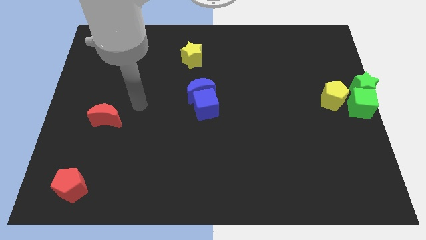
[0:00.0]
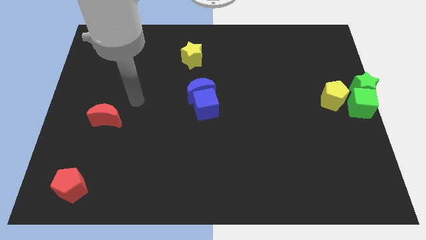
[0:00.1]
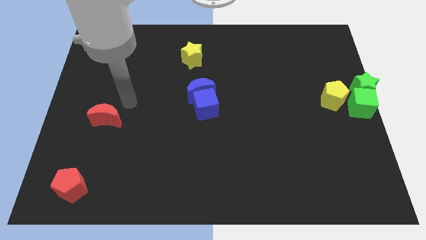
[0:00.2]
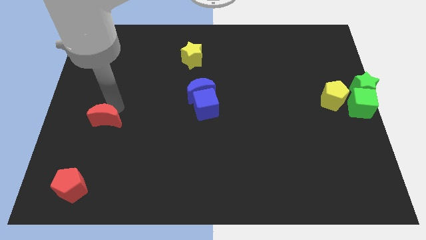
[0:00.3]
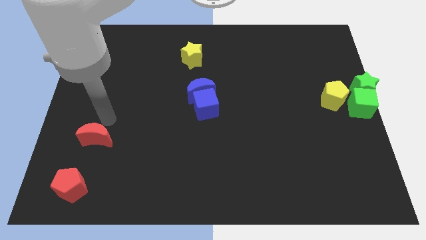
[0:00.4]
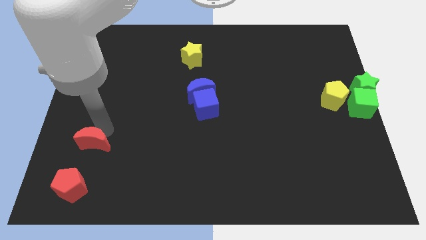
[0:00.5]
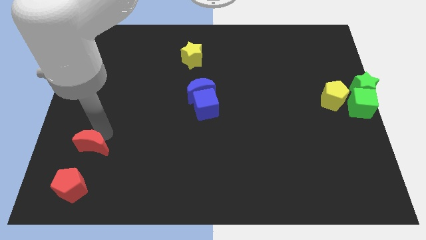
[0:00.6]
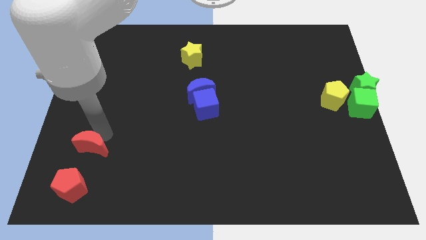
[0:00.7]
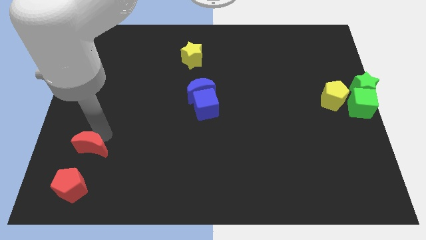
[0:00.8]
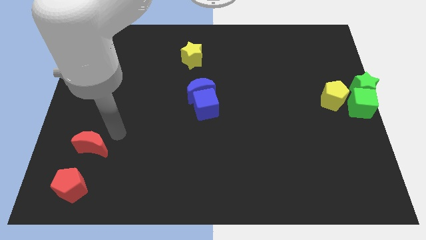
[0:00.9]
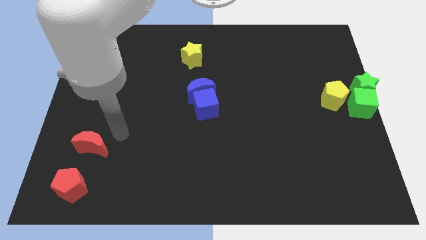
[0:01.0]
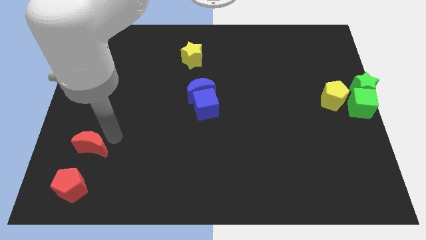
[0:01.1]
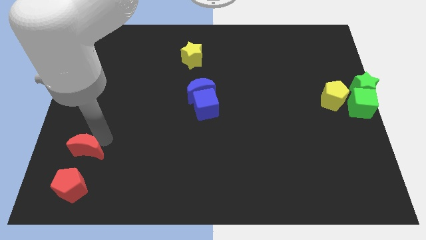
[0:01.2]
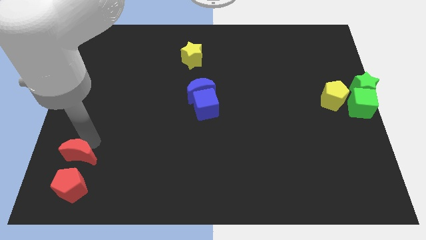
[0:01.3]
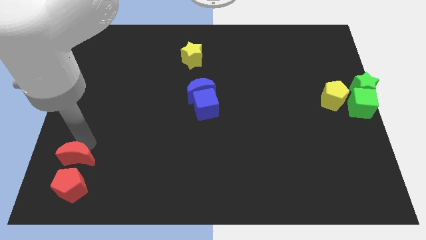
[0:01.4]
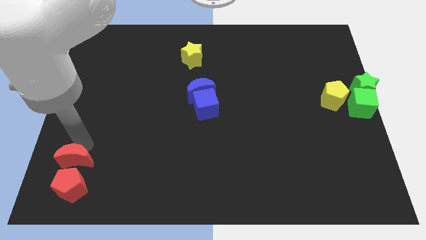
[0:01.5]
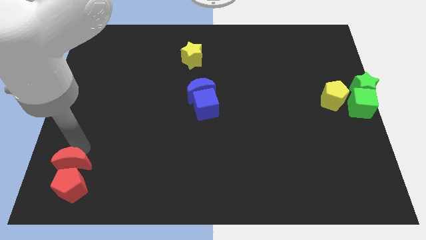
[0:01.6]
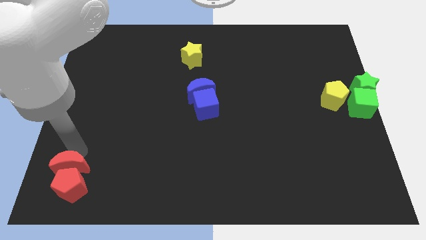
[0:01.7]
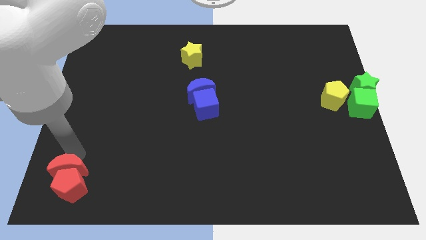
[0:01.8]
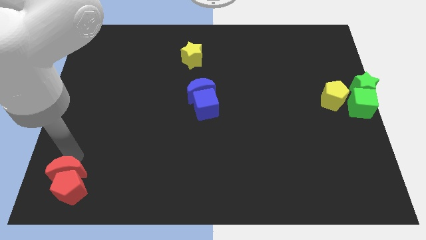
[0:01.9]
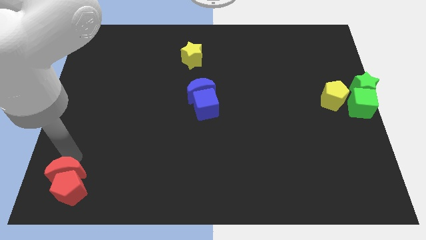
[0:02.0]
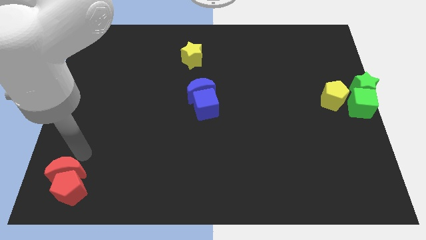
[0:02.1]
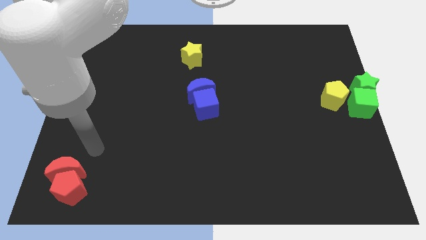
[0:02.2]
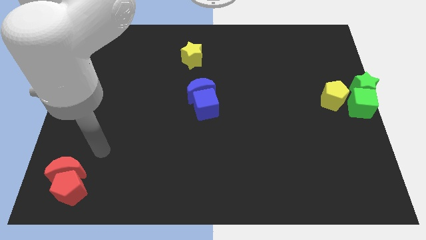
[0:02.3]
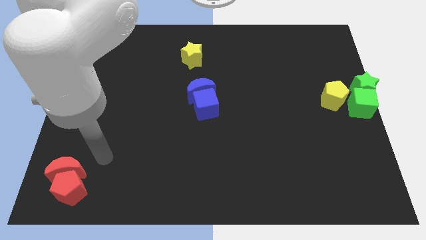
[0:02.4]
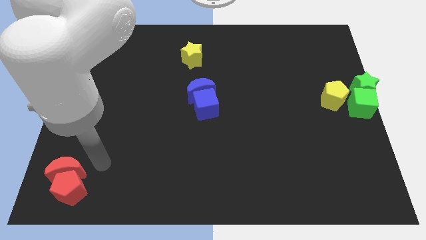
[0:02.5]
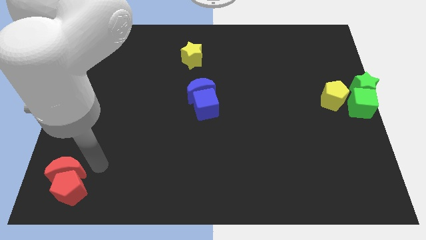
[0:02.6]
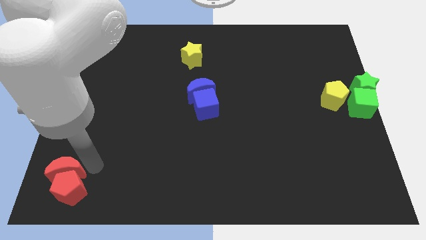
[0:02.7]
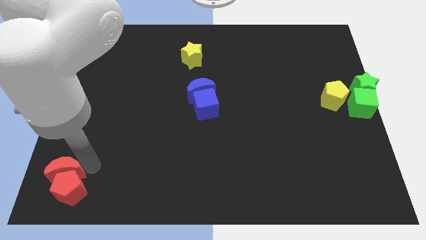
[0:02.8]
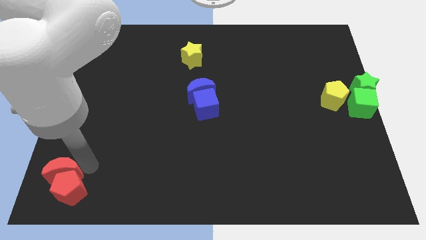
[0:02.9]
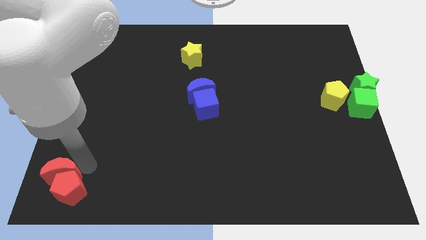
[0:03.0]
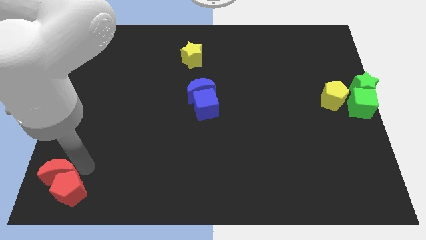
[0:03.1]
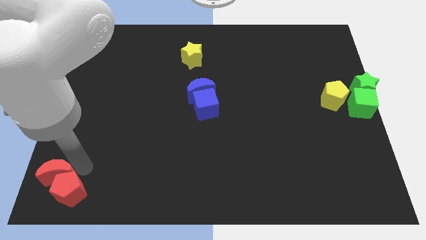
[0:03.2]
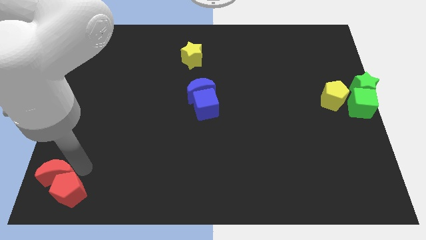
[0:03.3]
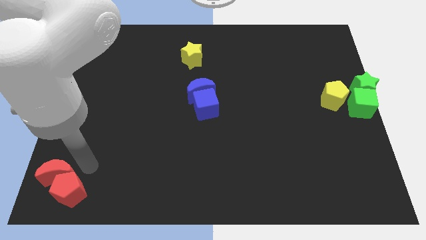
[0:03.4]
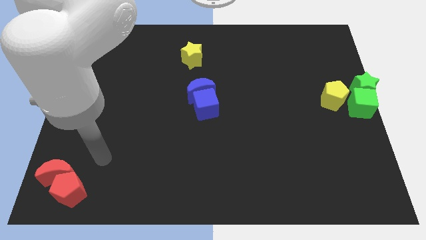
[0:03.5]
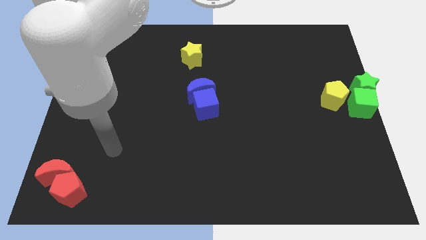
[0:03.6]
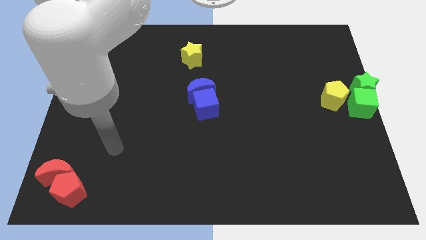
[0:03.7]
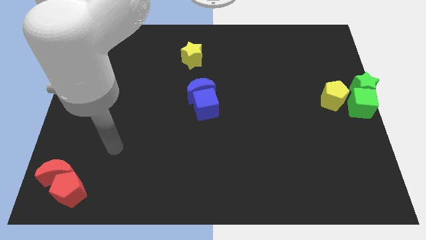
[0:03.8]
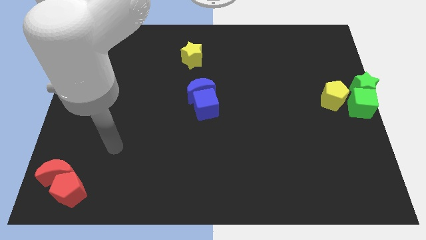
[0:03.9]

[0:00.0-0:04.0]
slide the red crescent to the top left side of the red pentagon

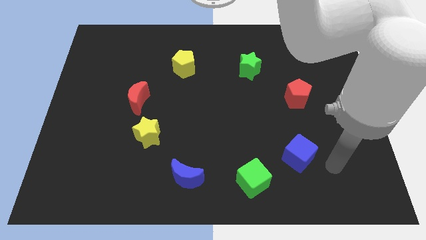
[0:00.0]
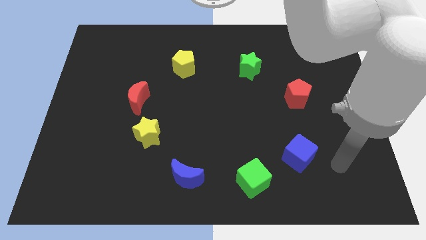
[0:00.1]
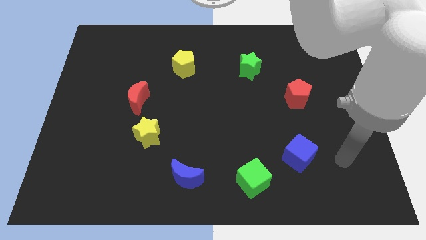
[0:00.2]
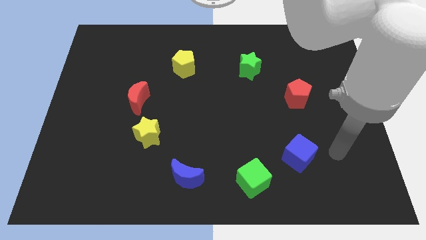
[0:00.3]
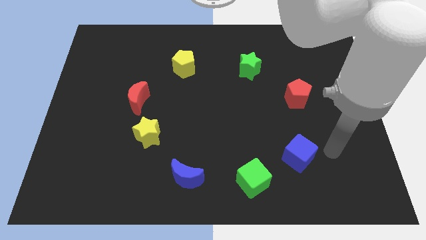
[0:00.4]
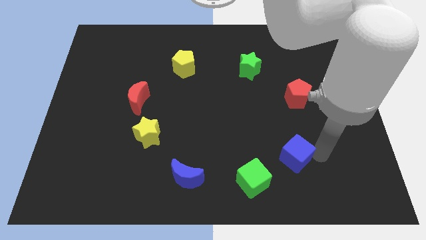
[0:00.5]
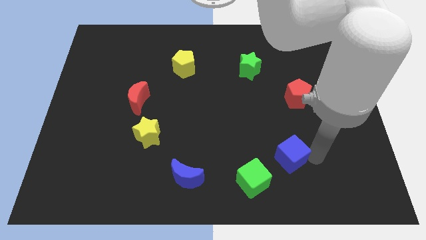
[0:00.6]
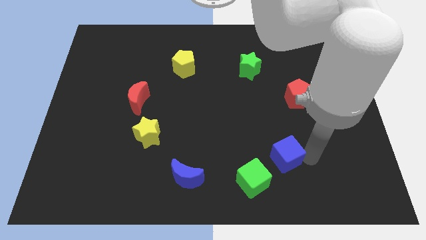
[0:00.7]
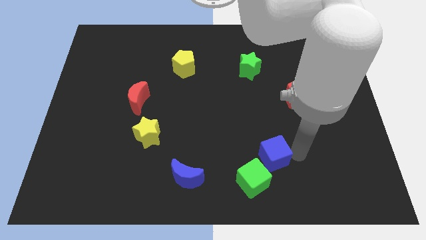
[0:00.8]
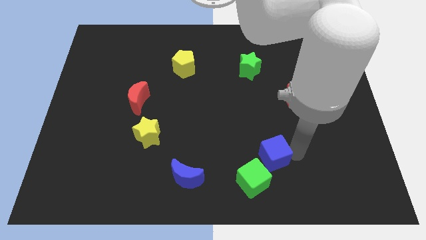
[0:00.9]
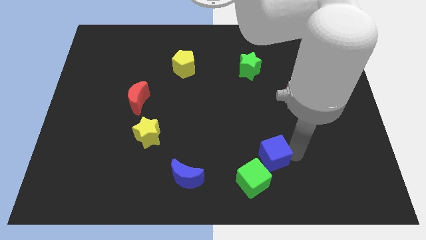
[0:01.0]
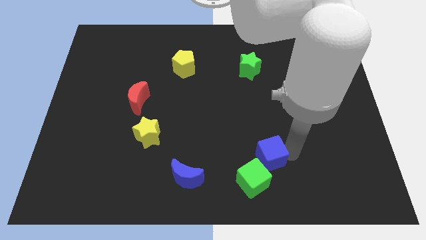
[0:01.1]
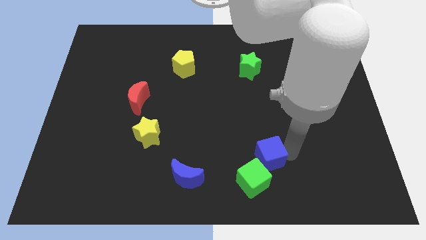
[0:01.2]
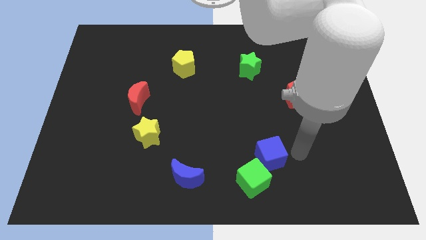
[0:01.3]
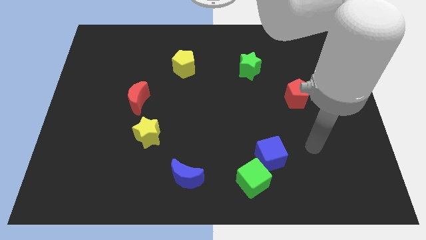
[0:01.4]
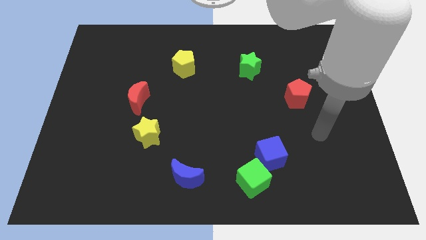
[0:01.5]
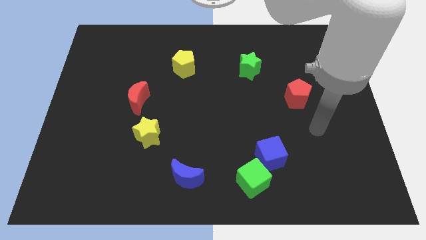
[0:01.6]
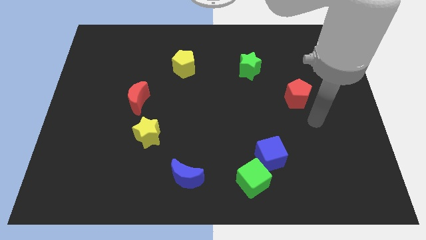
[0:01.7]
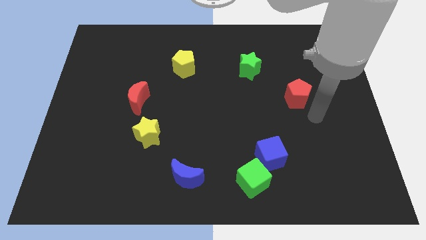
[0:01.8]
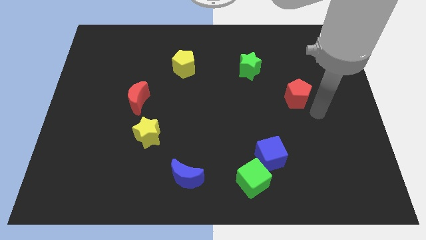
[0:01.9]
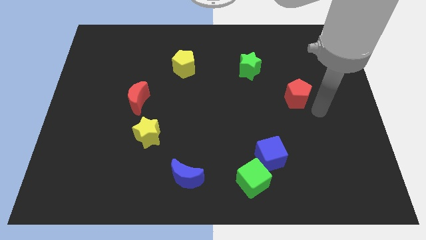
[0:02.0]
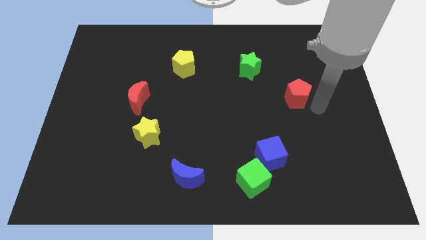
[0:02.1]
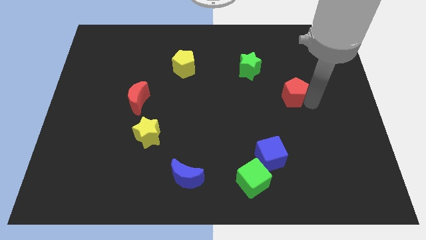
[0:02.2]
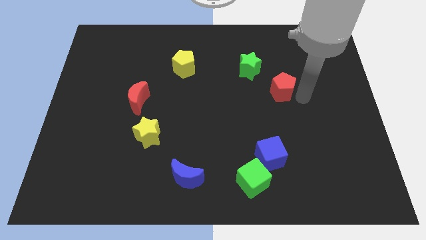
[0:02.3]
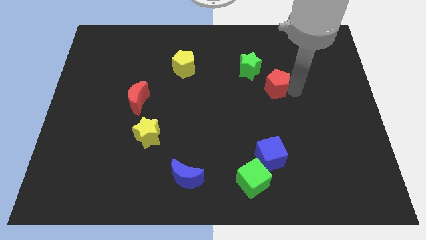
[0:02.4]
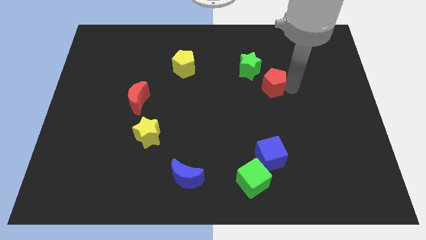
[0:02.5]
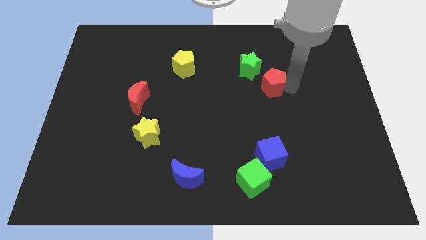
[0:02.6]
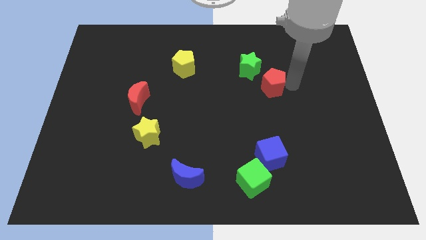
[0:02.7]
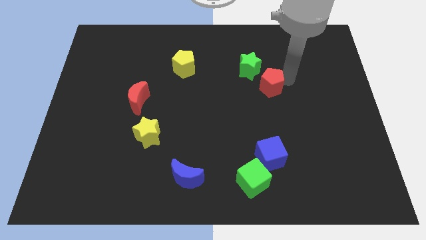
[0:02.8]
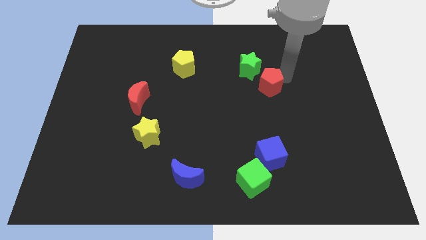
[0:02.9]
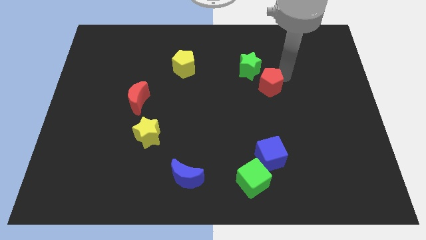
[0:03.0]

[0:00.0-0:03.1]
attach the blue cube to the green cube

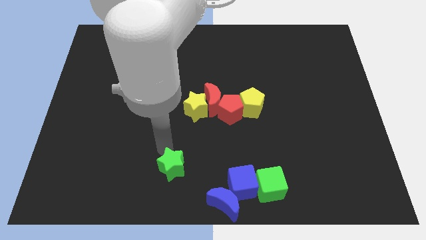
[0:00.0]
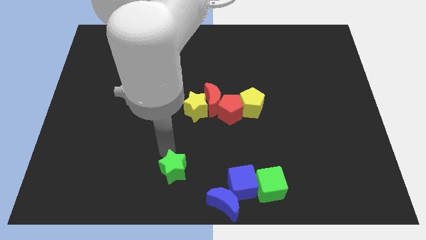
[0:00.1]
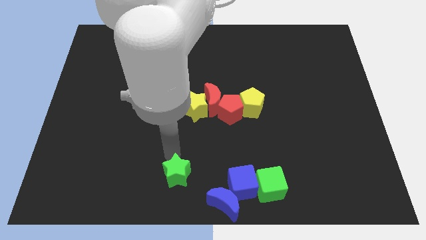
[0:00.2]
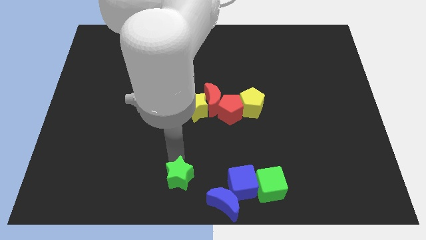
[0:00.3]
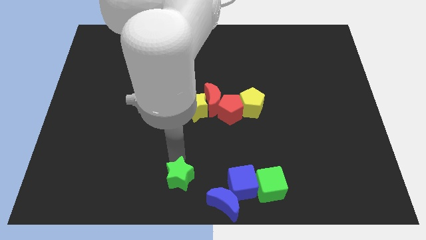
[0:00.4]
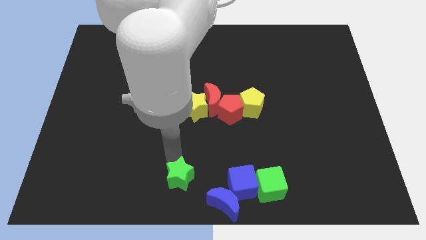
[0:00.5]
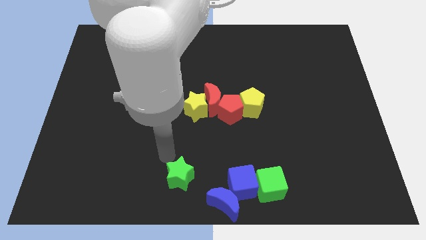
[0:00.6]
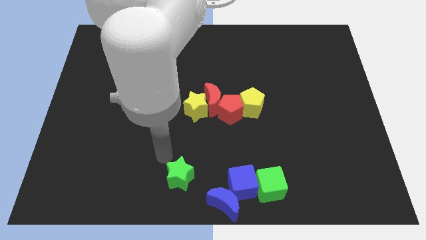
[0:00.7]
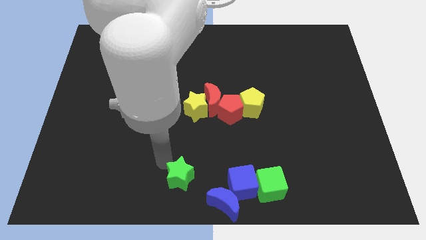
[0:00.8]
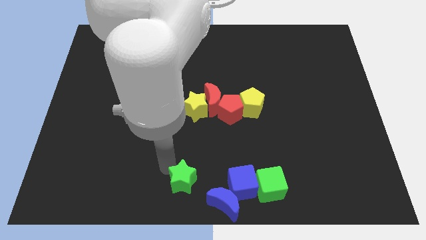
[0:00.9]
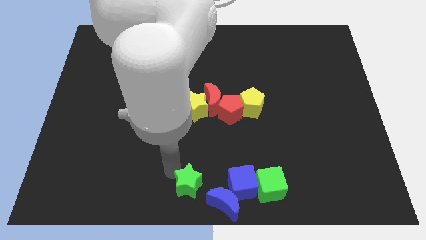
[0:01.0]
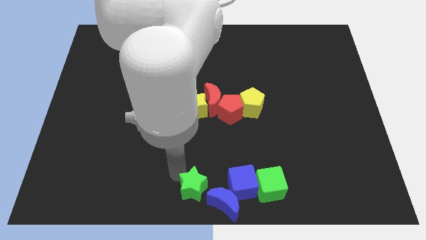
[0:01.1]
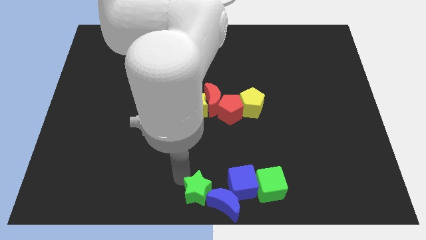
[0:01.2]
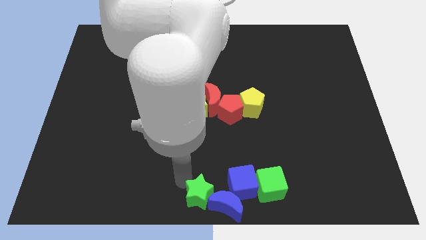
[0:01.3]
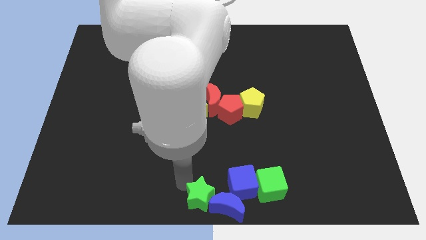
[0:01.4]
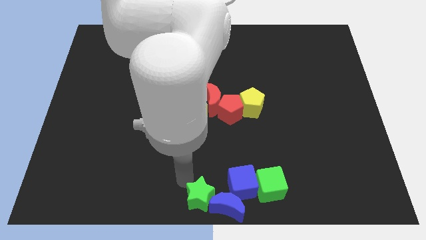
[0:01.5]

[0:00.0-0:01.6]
push the green star left to the blue crescent

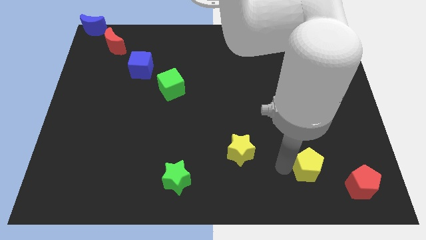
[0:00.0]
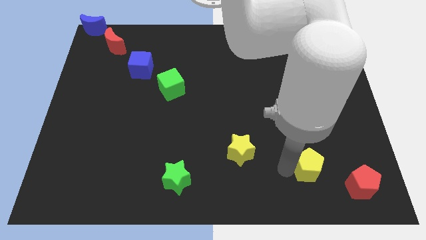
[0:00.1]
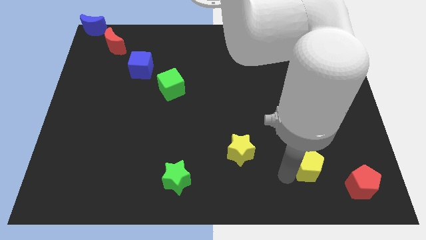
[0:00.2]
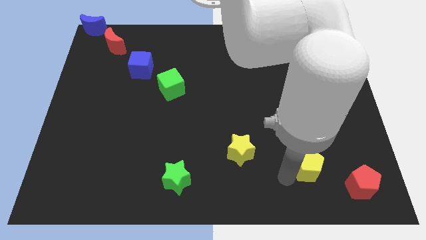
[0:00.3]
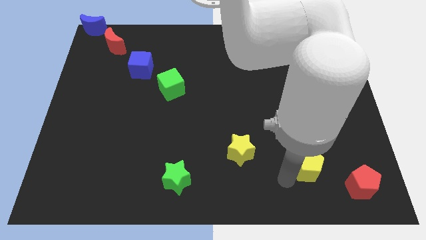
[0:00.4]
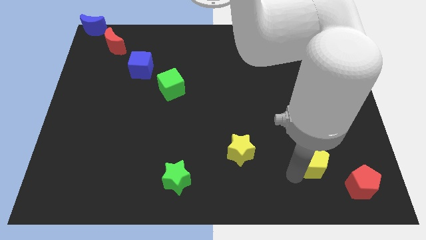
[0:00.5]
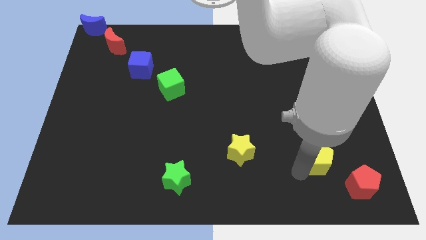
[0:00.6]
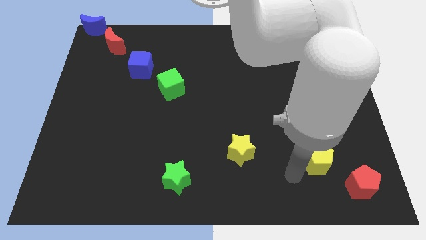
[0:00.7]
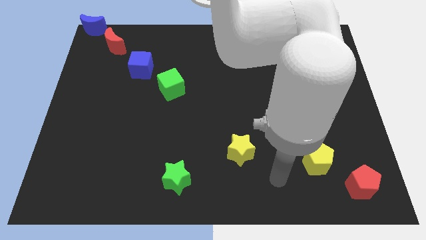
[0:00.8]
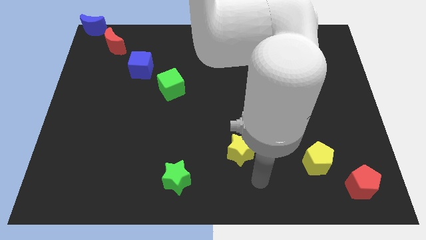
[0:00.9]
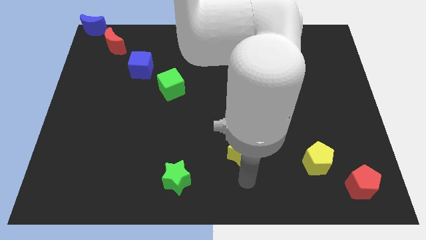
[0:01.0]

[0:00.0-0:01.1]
push the yellow pentagon diagonally left to the red pentagon
